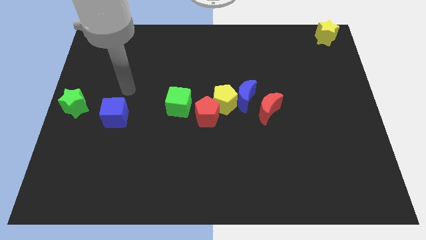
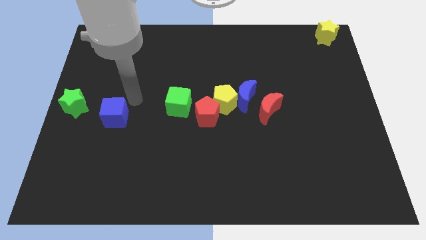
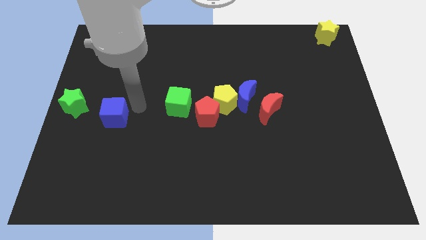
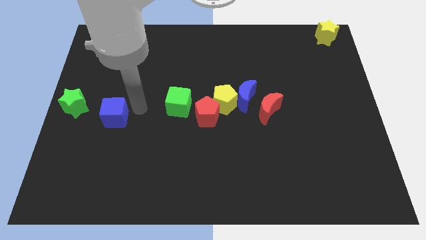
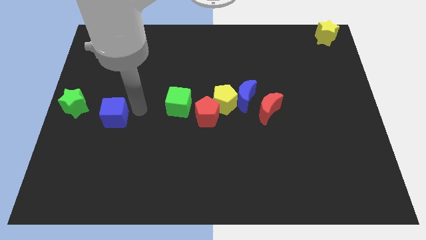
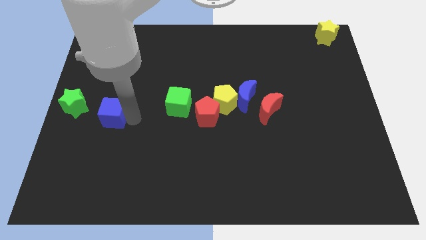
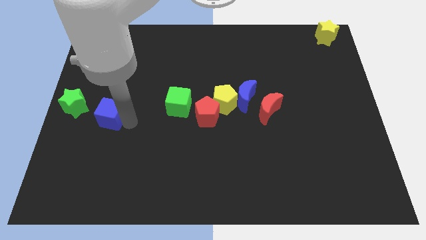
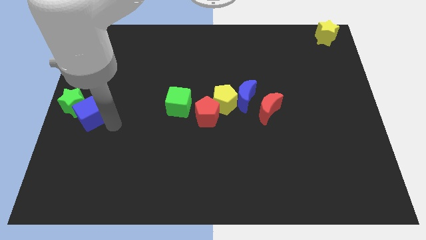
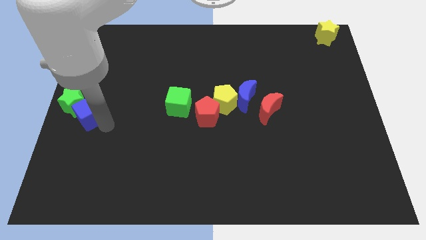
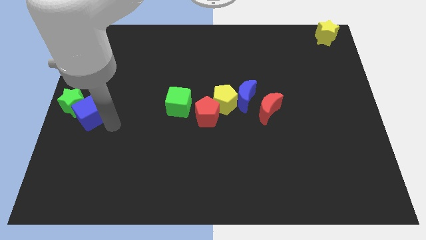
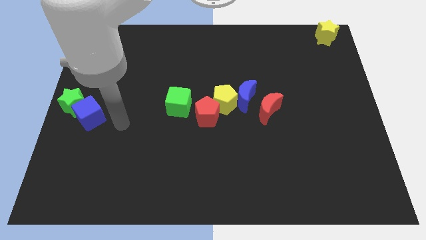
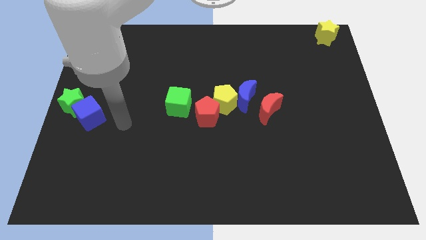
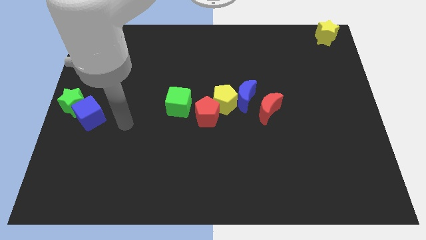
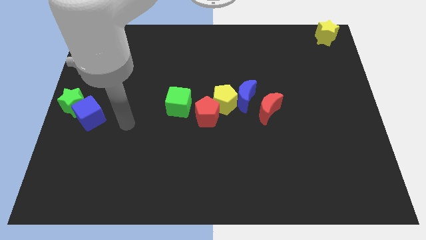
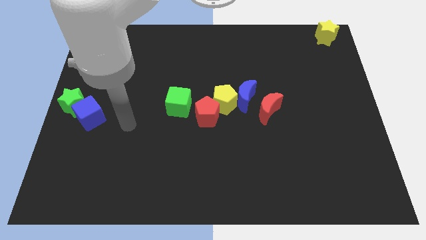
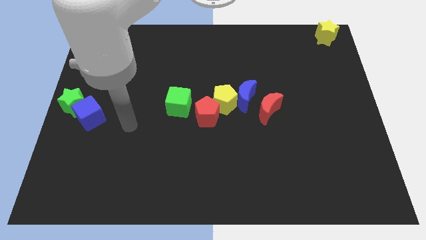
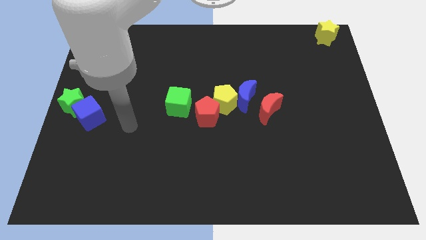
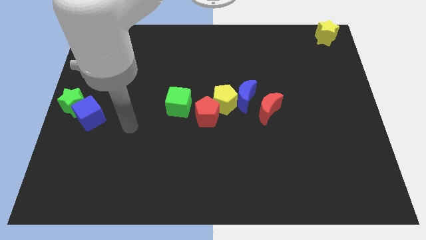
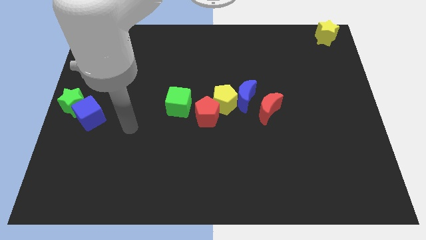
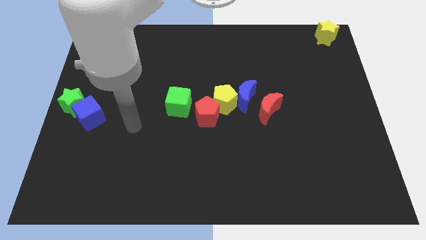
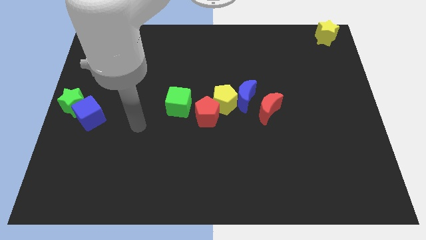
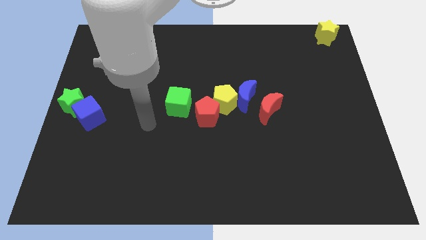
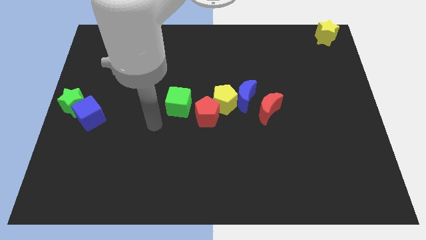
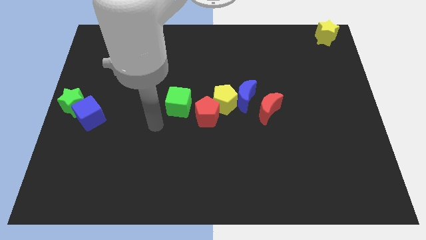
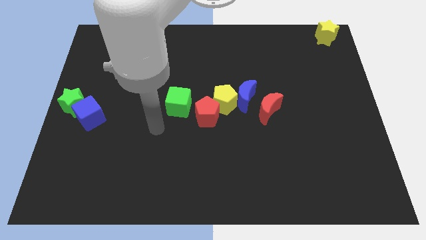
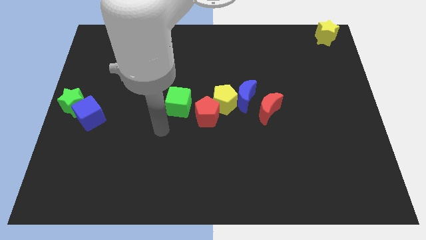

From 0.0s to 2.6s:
move blue cube into green star

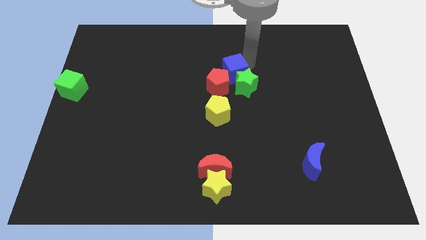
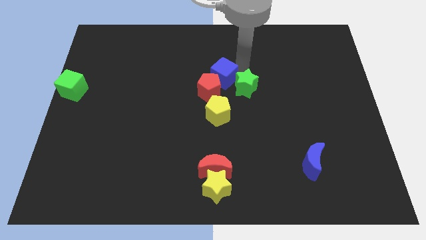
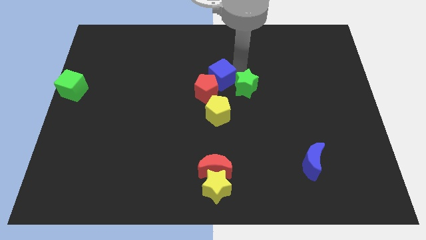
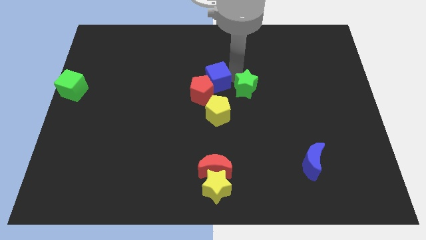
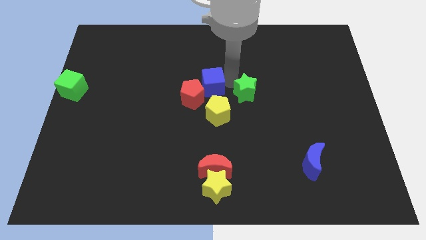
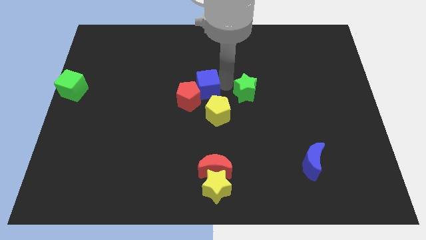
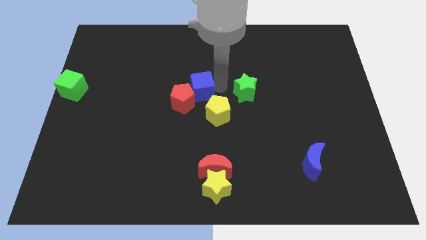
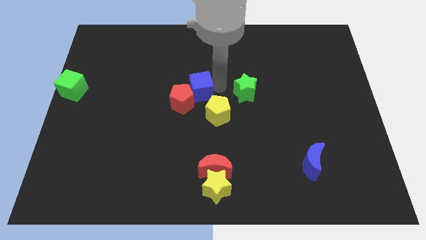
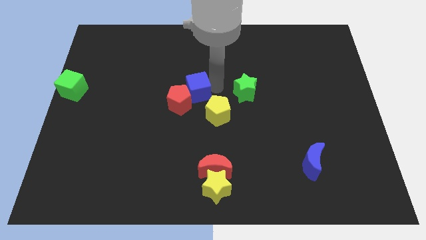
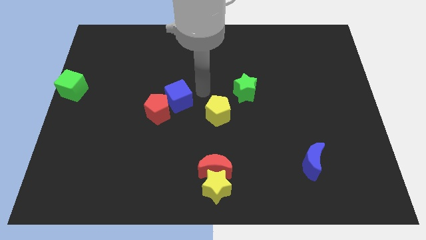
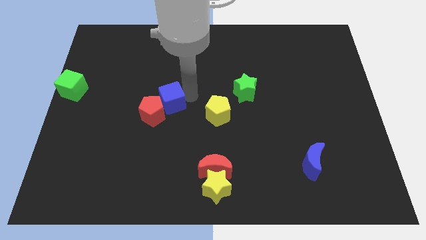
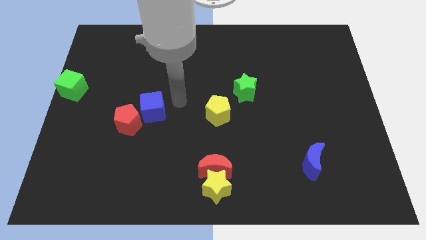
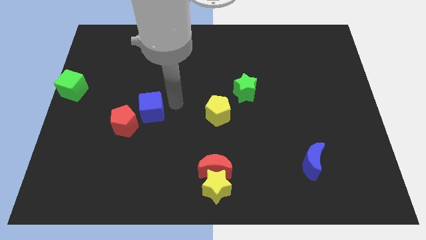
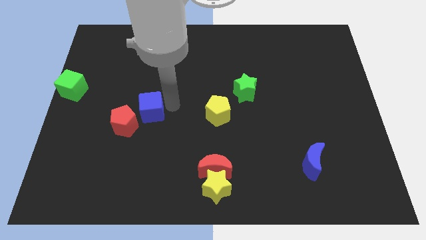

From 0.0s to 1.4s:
place blue cube to the left of yellow pentagon

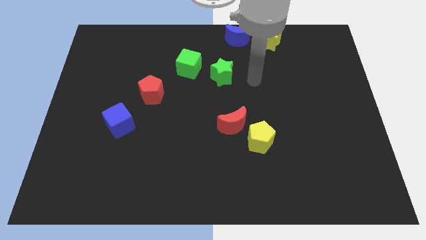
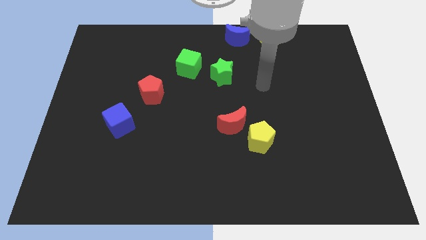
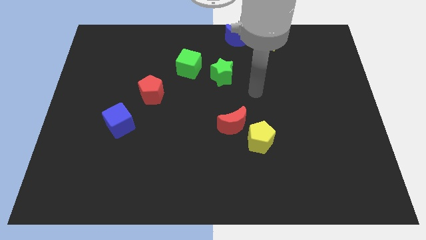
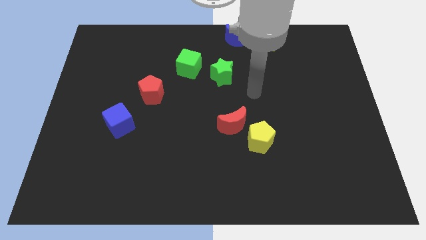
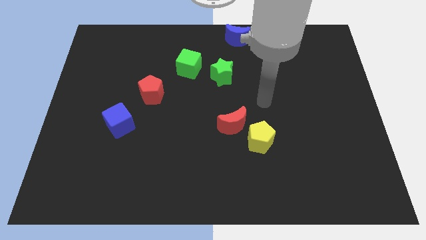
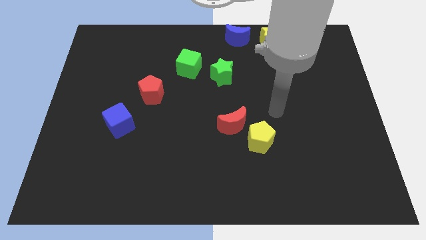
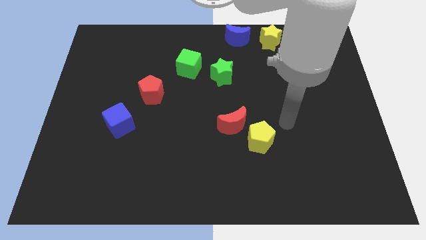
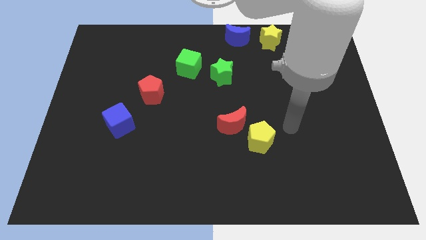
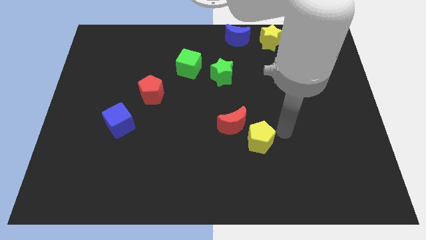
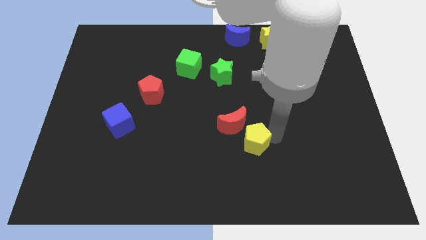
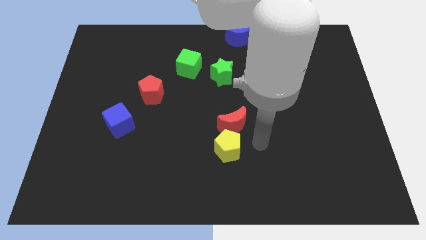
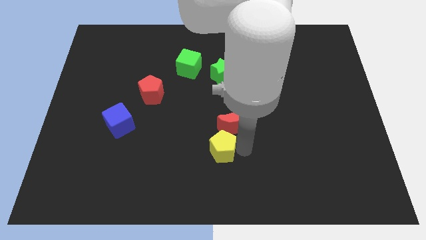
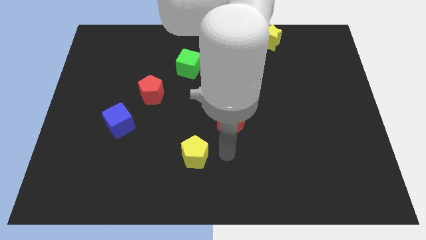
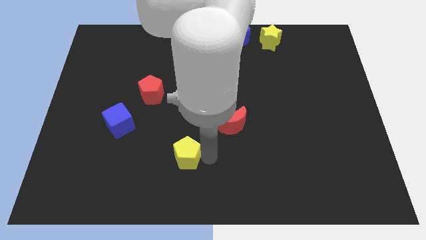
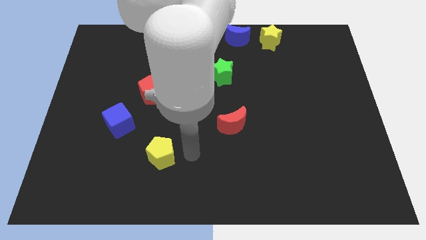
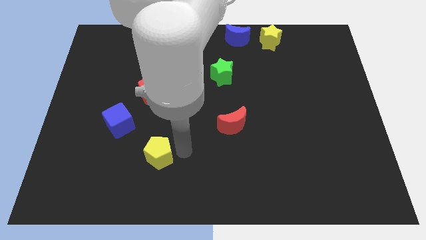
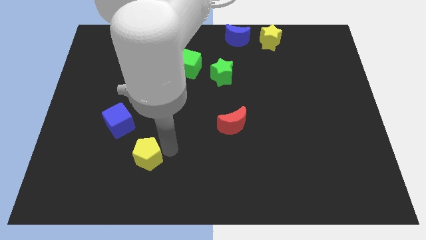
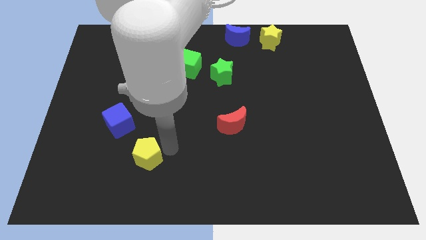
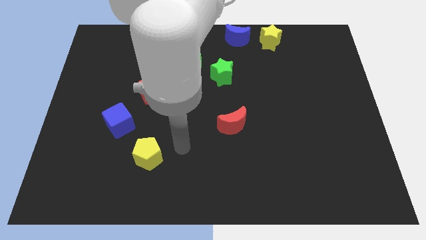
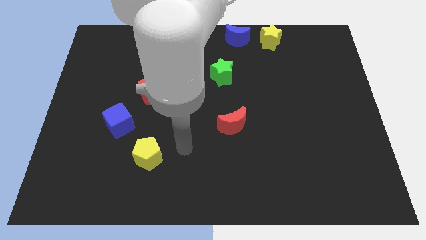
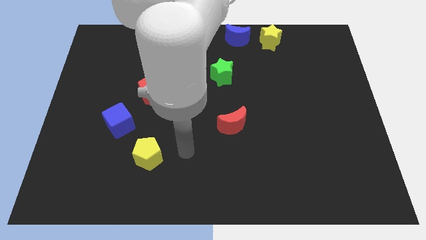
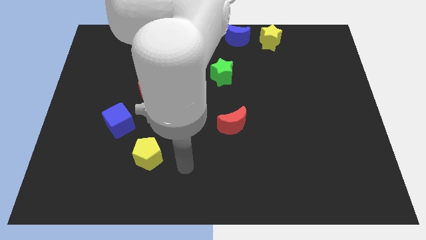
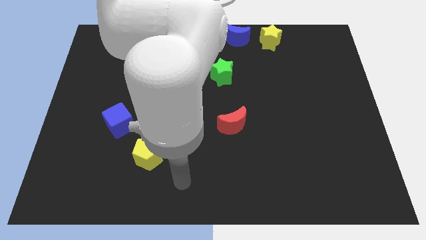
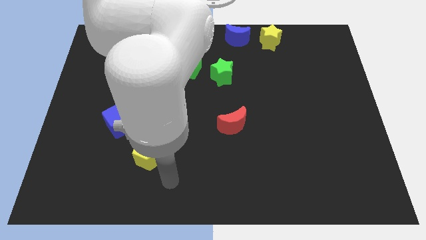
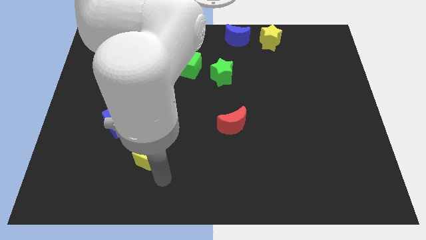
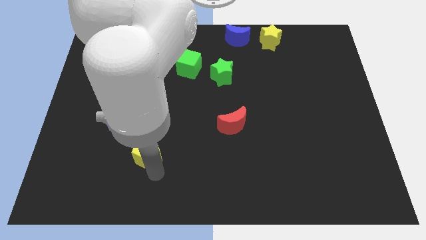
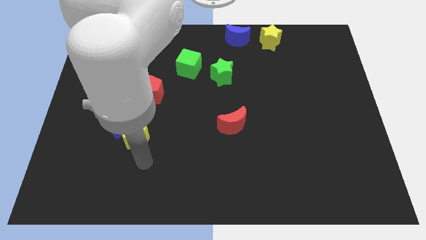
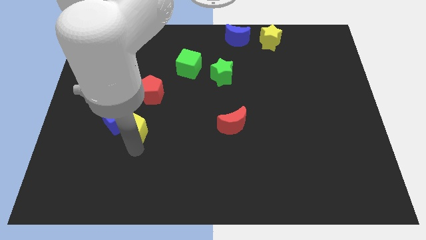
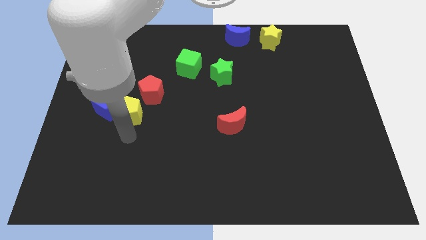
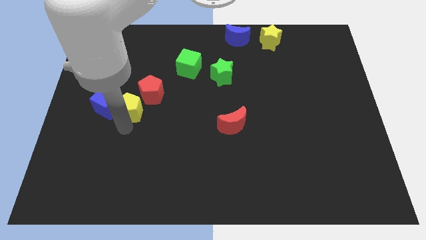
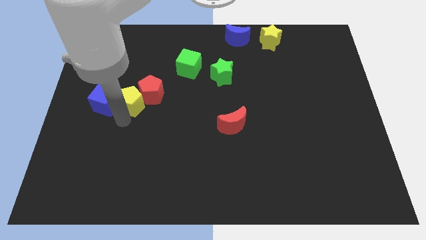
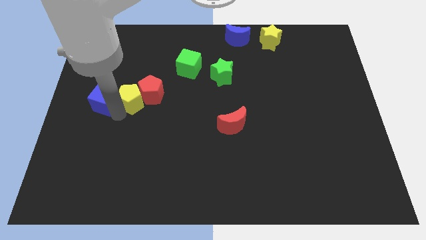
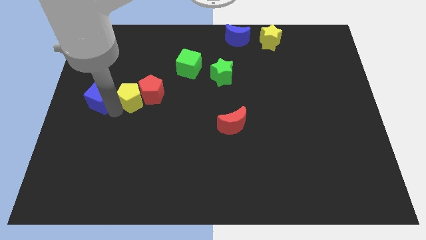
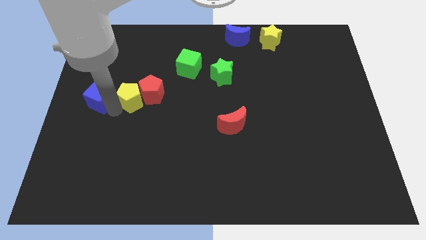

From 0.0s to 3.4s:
place the yellow pentagon in between the red pentagon and blue cube

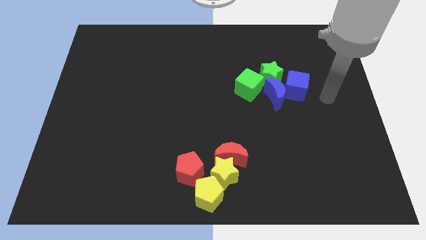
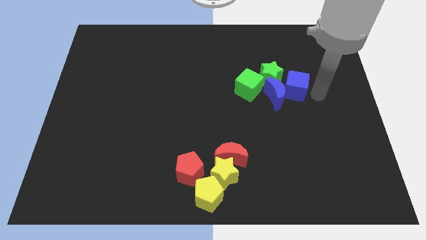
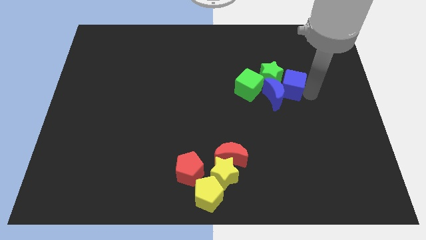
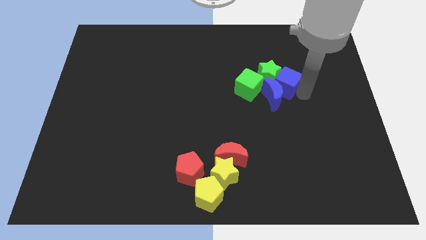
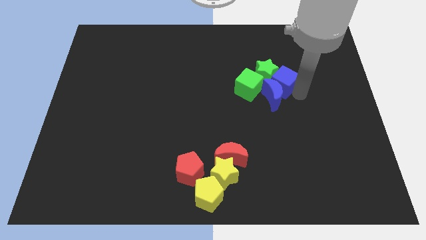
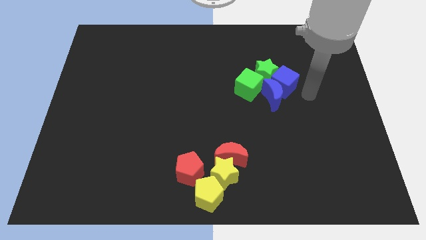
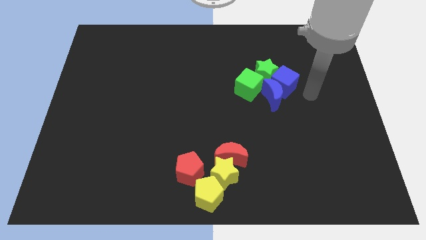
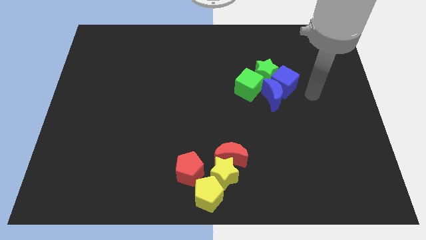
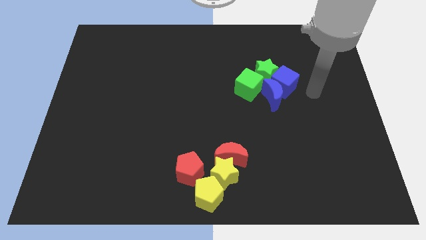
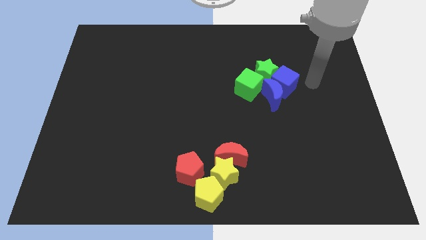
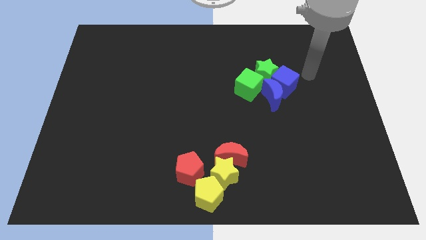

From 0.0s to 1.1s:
push the blue cube into the green star

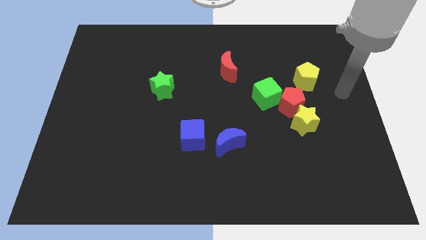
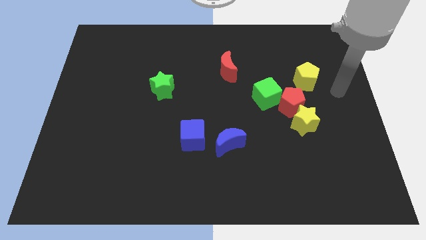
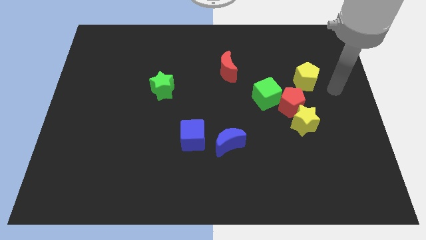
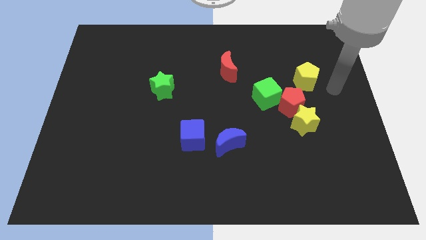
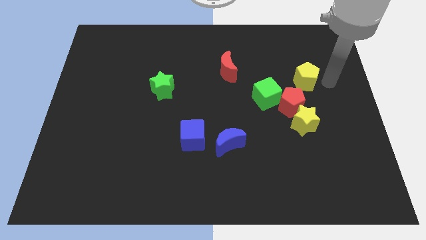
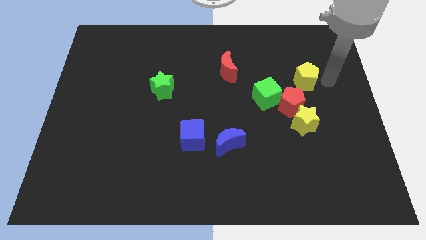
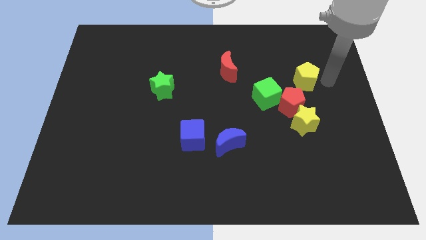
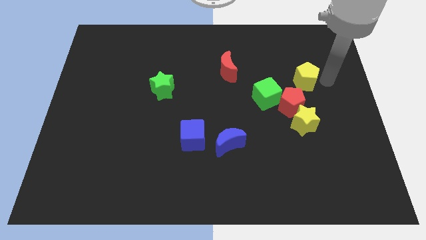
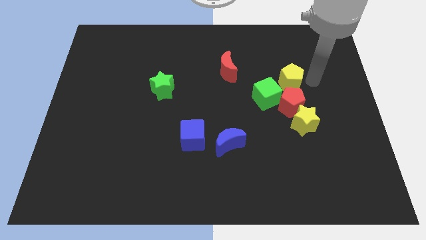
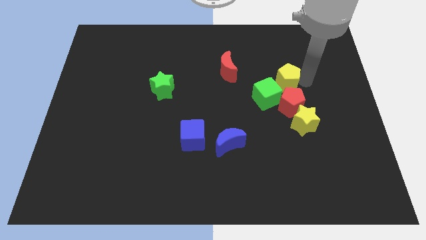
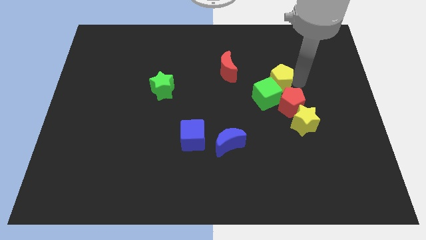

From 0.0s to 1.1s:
move the yellow pentagon into the green cube
